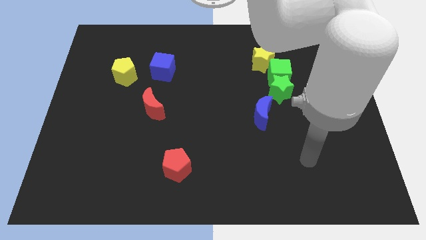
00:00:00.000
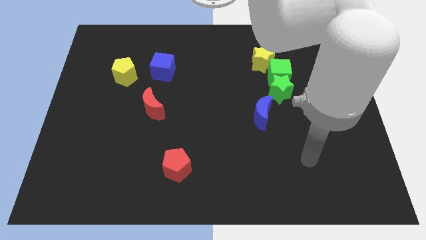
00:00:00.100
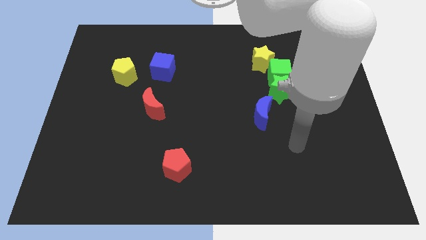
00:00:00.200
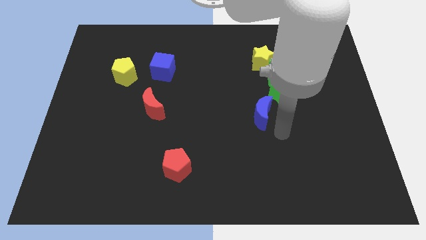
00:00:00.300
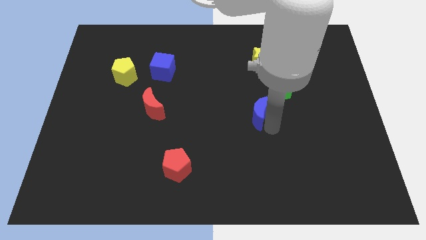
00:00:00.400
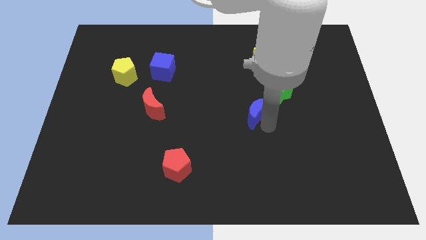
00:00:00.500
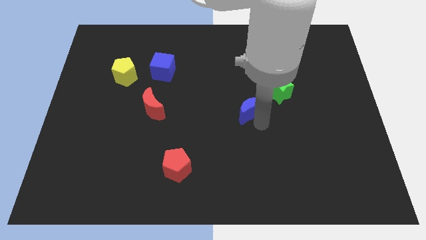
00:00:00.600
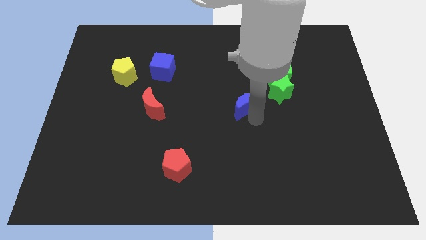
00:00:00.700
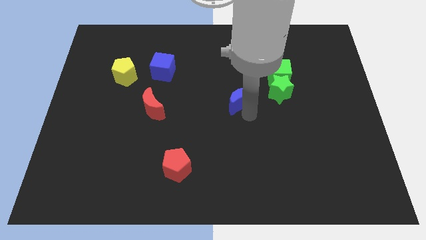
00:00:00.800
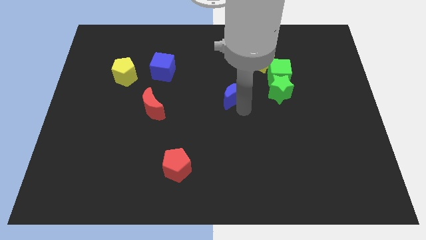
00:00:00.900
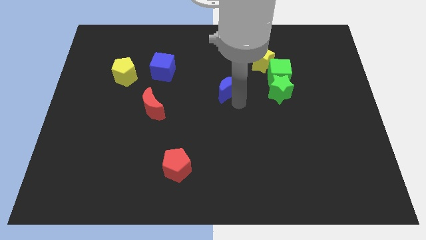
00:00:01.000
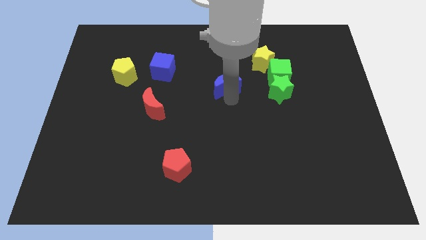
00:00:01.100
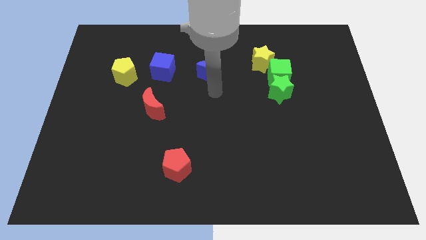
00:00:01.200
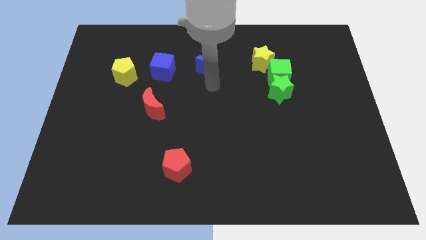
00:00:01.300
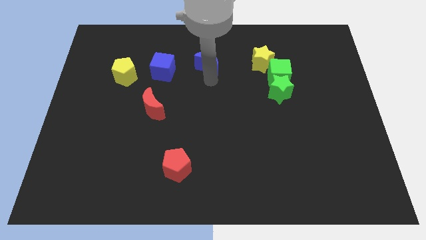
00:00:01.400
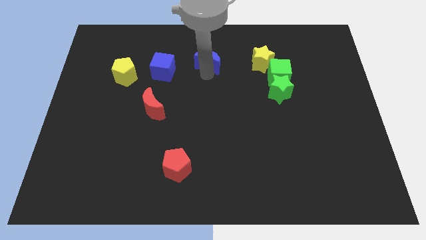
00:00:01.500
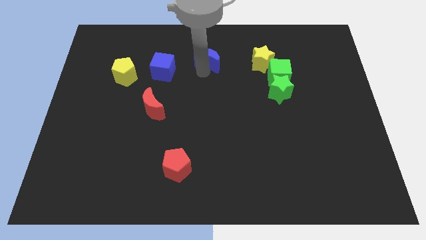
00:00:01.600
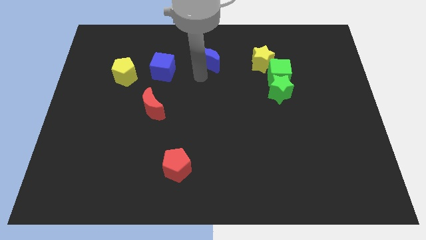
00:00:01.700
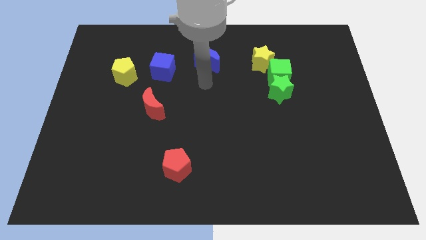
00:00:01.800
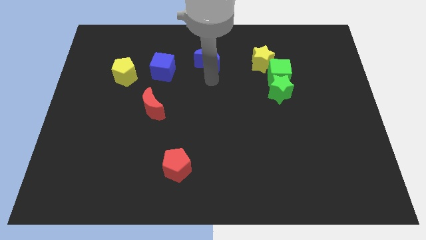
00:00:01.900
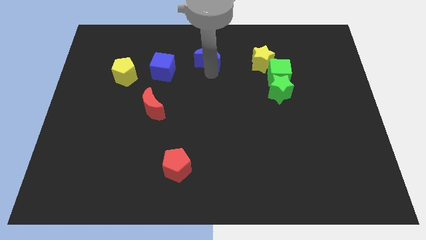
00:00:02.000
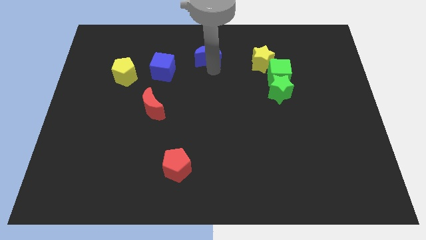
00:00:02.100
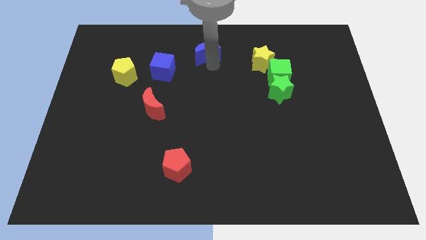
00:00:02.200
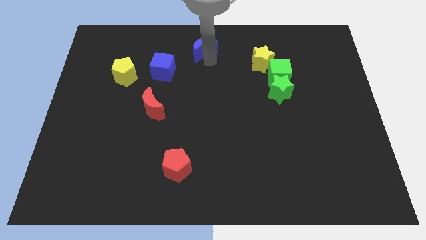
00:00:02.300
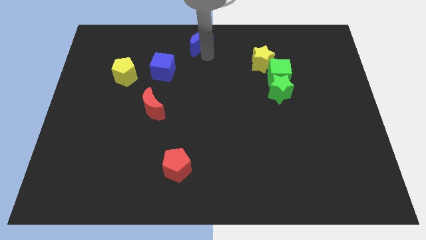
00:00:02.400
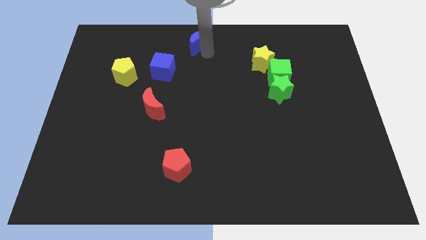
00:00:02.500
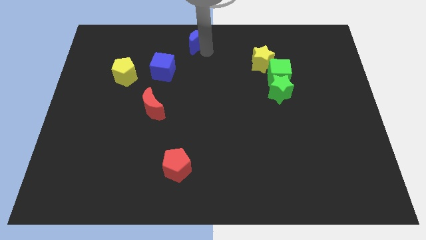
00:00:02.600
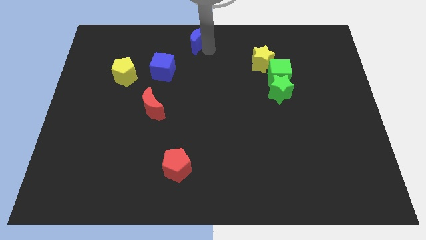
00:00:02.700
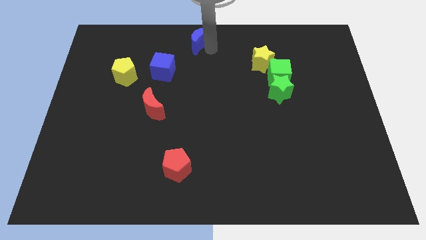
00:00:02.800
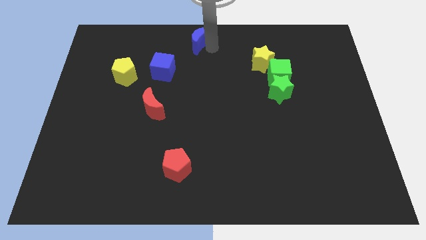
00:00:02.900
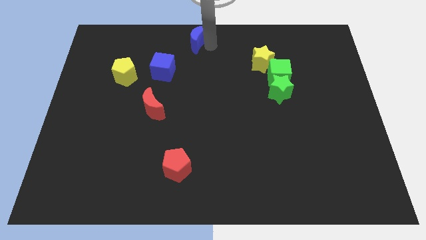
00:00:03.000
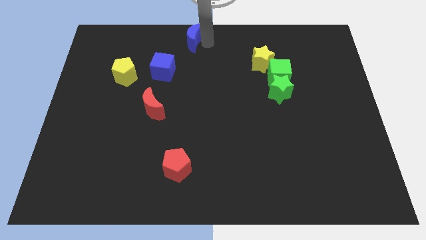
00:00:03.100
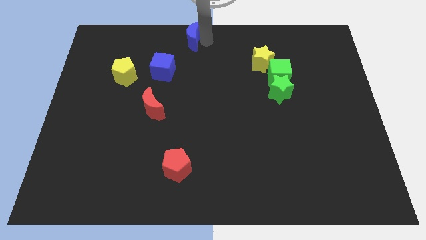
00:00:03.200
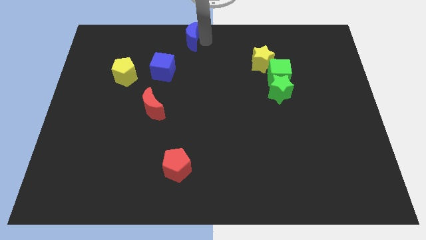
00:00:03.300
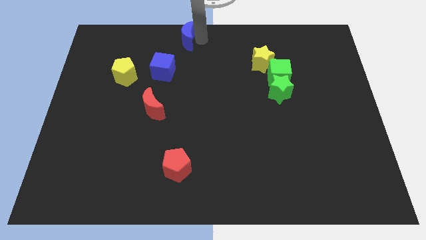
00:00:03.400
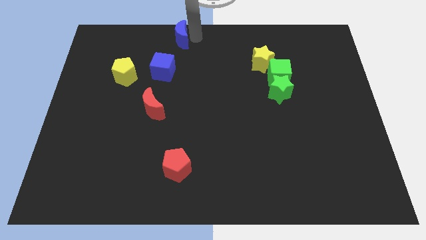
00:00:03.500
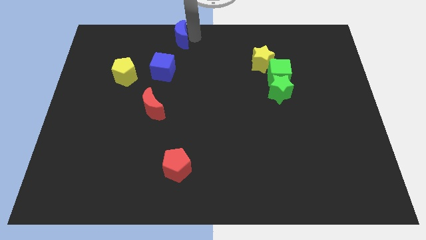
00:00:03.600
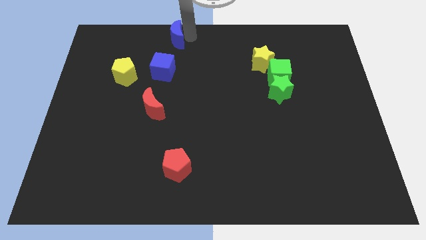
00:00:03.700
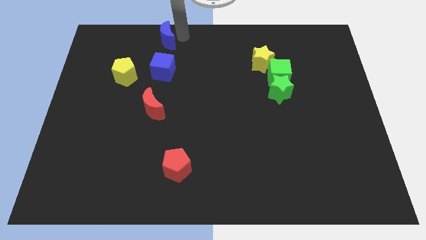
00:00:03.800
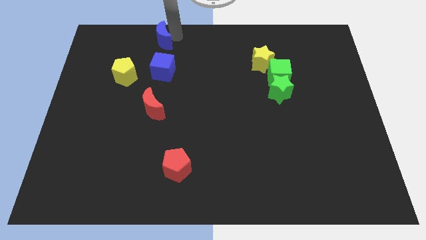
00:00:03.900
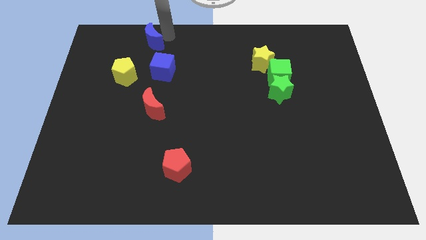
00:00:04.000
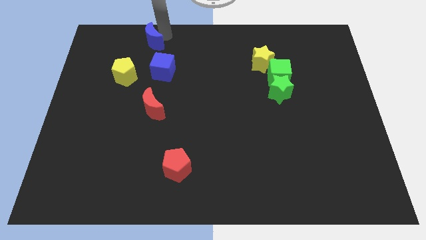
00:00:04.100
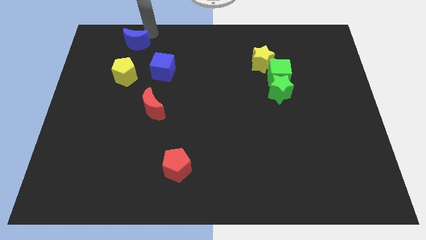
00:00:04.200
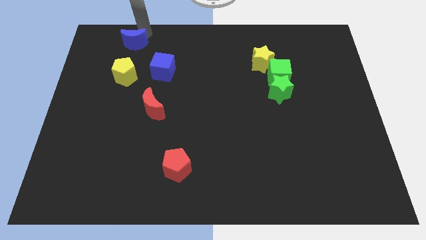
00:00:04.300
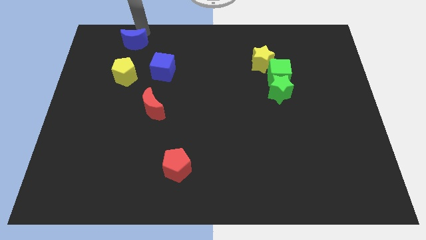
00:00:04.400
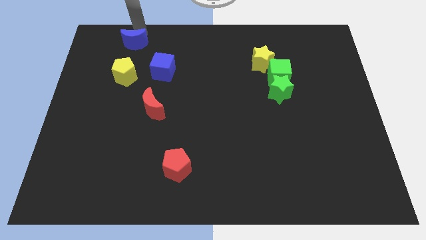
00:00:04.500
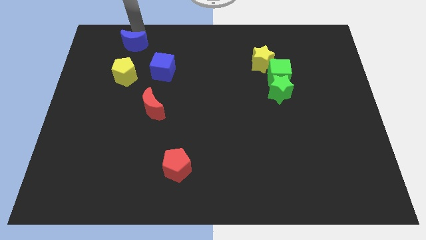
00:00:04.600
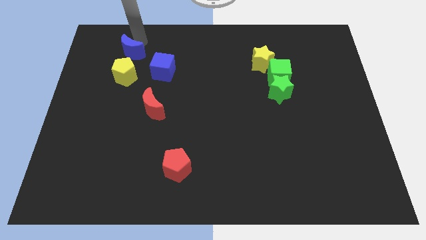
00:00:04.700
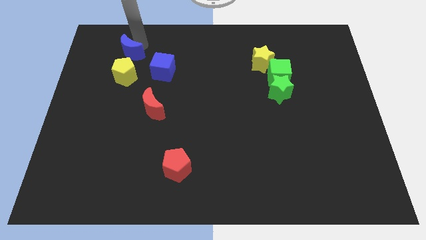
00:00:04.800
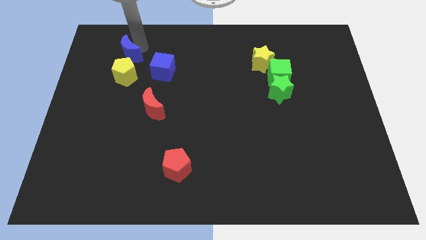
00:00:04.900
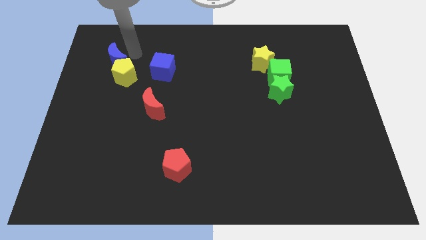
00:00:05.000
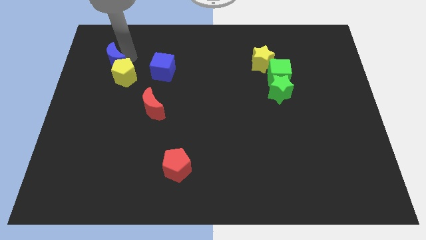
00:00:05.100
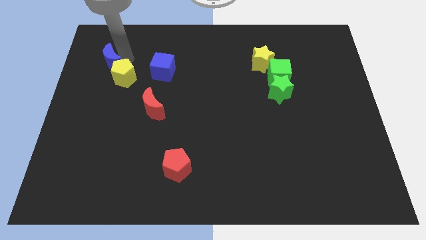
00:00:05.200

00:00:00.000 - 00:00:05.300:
put the blue moon towards the yellow pentagon

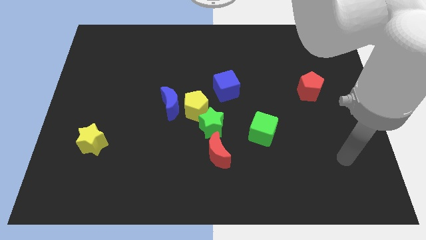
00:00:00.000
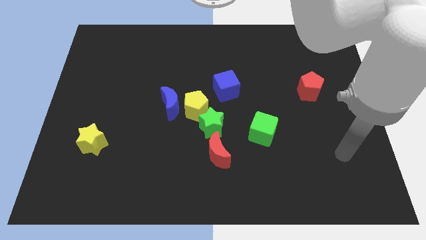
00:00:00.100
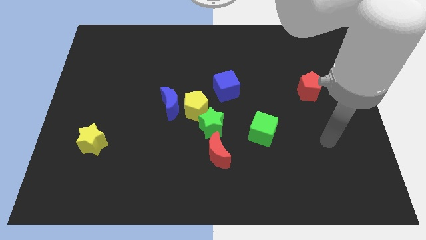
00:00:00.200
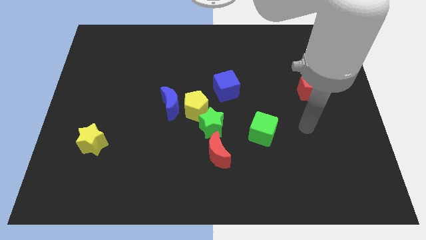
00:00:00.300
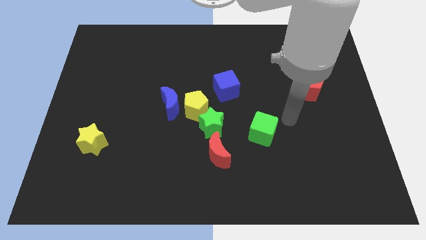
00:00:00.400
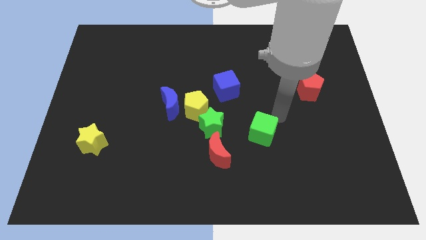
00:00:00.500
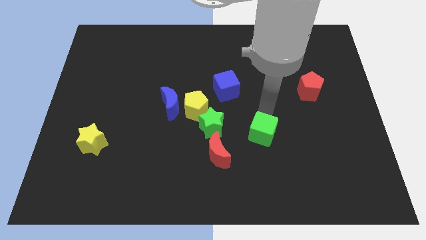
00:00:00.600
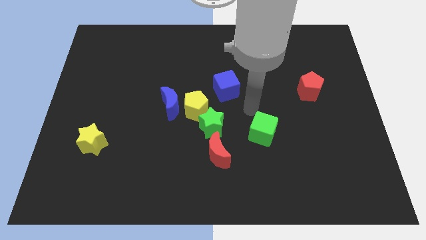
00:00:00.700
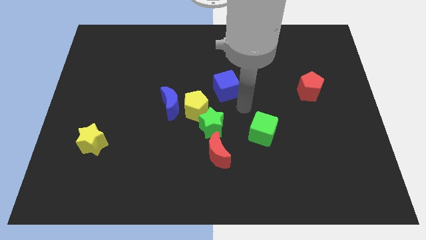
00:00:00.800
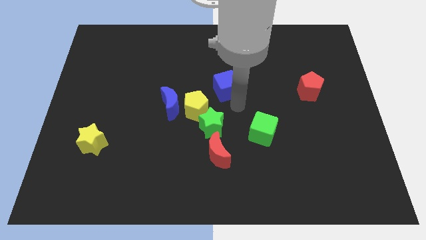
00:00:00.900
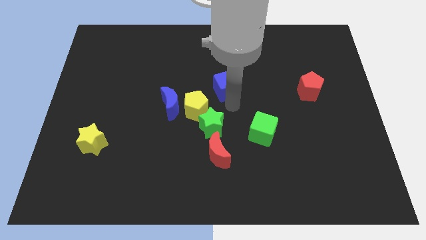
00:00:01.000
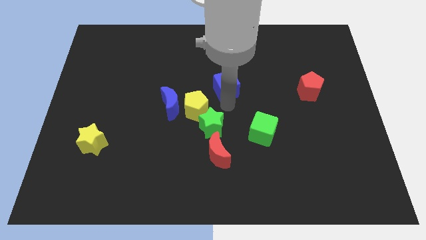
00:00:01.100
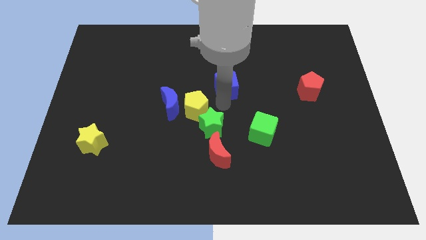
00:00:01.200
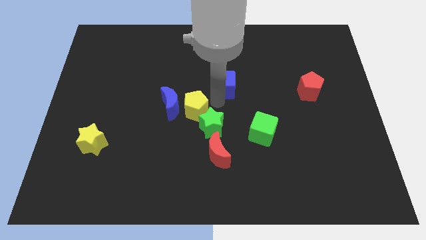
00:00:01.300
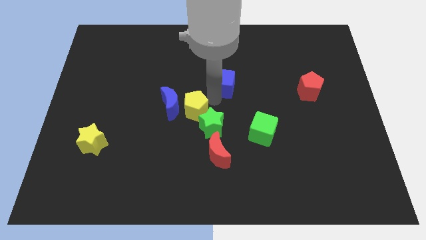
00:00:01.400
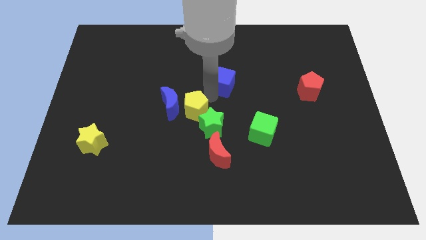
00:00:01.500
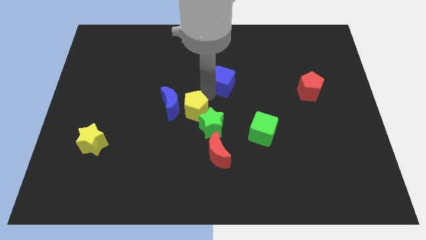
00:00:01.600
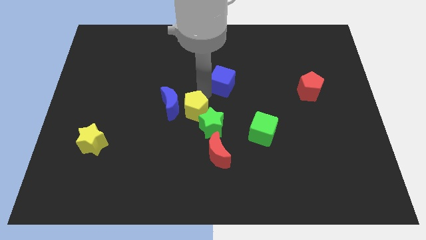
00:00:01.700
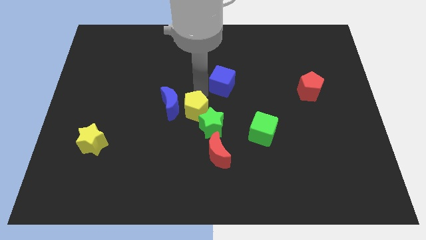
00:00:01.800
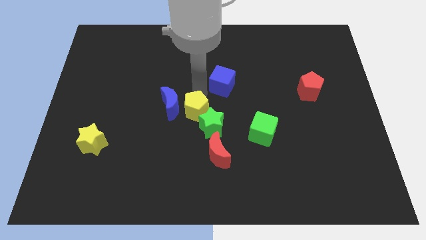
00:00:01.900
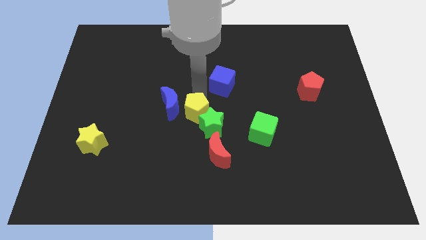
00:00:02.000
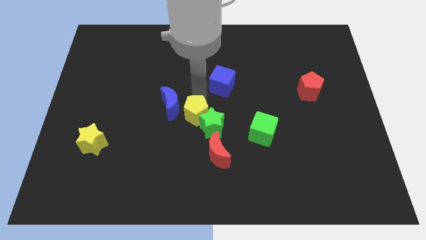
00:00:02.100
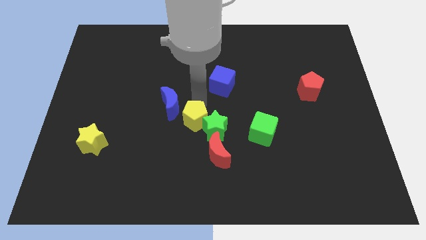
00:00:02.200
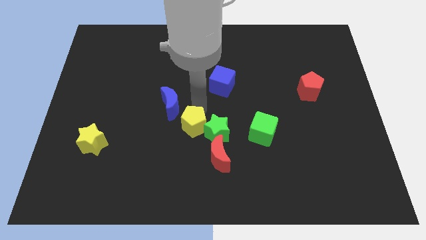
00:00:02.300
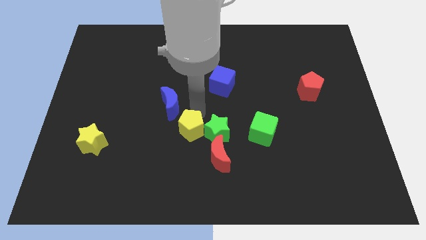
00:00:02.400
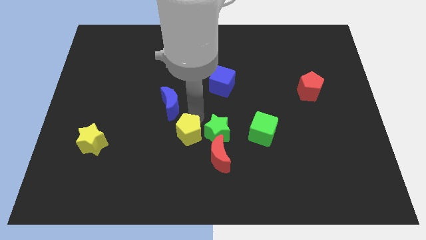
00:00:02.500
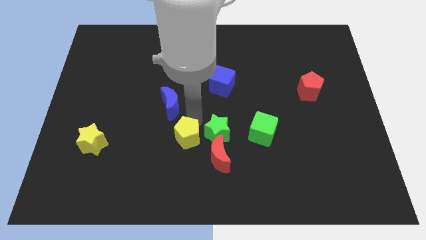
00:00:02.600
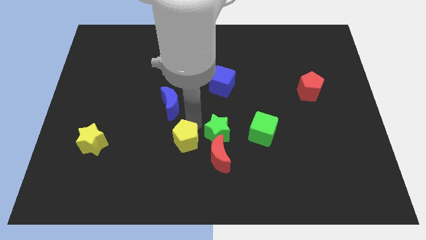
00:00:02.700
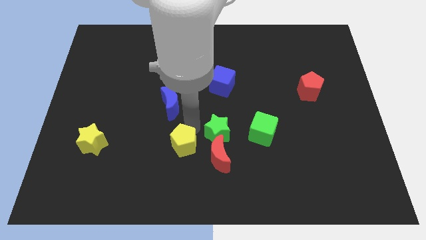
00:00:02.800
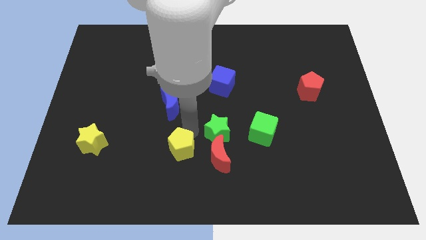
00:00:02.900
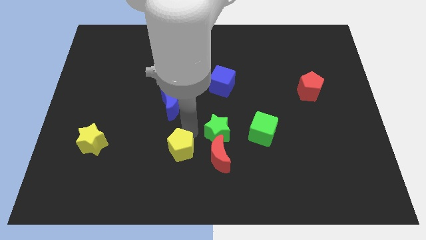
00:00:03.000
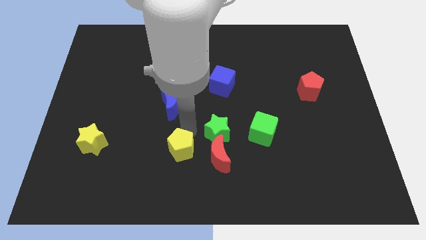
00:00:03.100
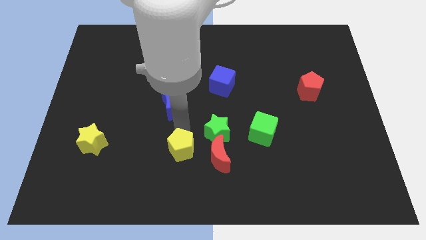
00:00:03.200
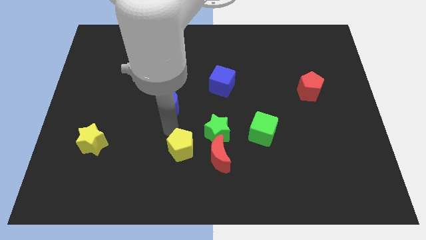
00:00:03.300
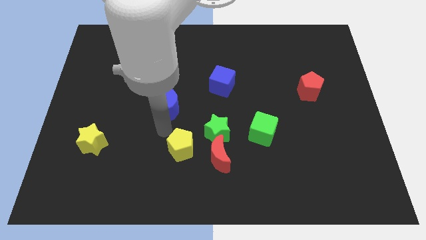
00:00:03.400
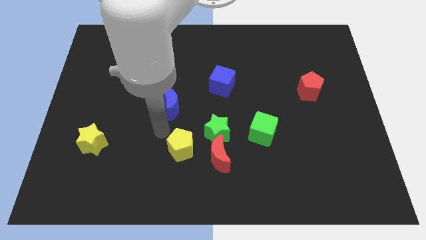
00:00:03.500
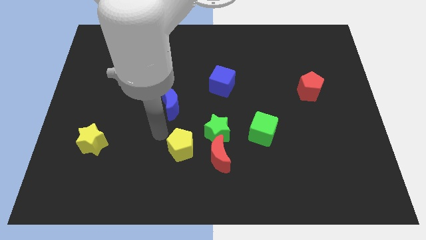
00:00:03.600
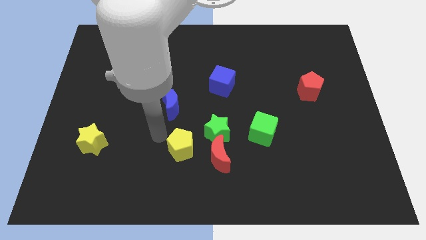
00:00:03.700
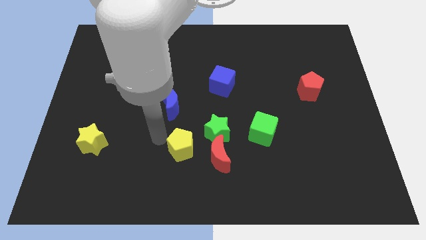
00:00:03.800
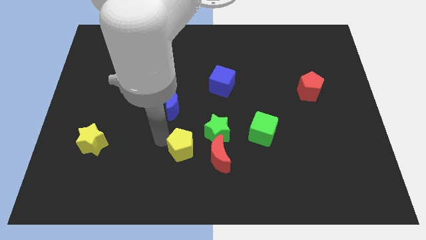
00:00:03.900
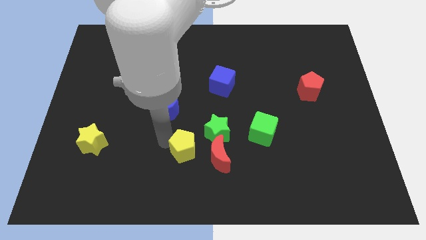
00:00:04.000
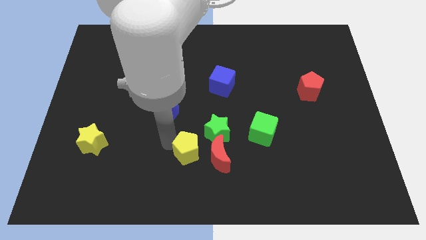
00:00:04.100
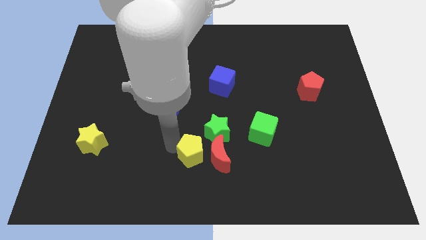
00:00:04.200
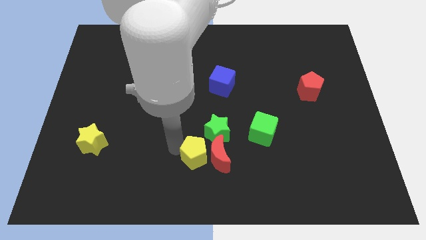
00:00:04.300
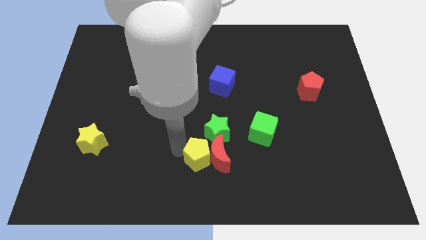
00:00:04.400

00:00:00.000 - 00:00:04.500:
slide the yellow pentagon next to the red moon
